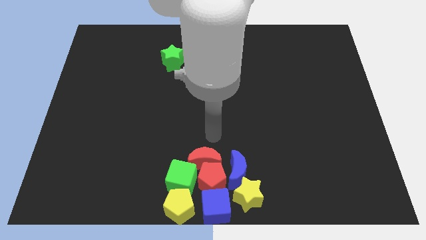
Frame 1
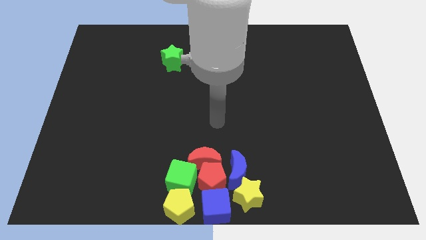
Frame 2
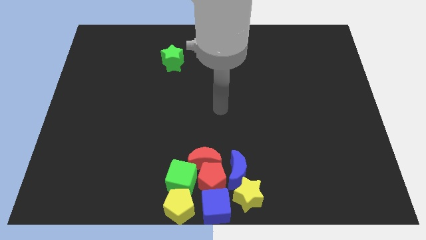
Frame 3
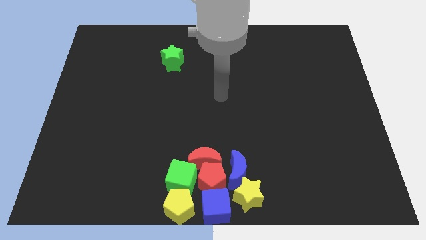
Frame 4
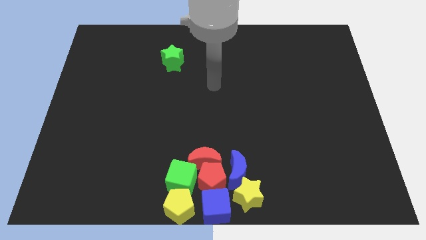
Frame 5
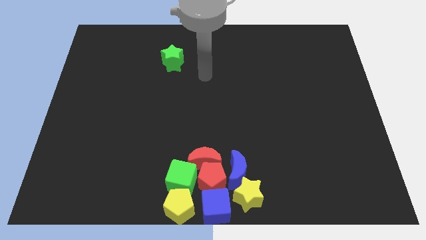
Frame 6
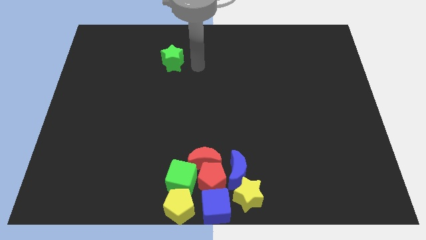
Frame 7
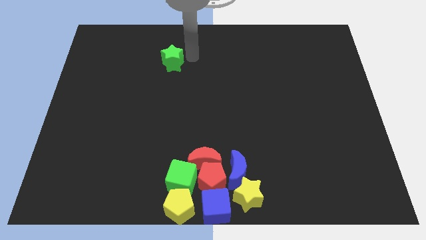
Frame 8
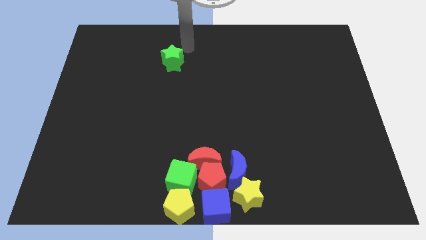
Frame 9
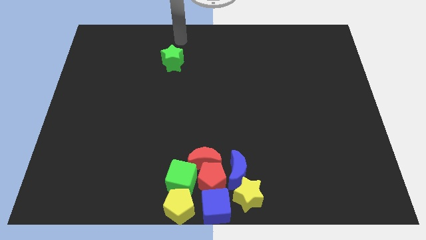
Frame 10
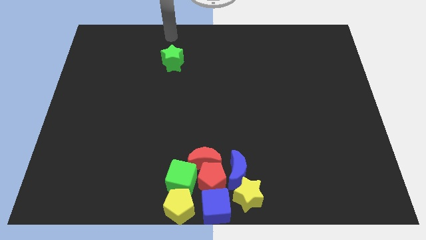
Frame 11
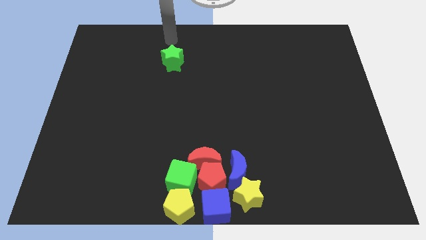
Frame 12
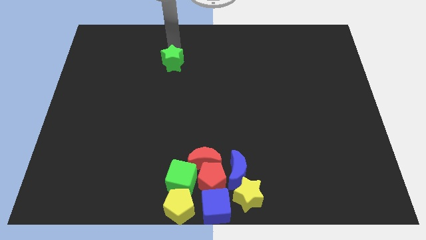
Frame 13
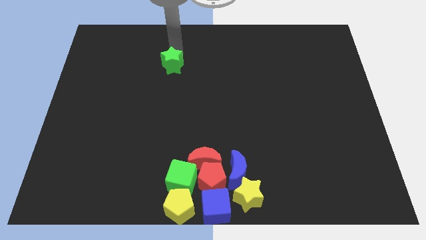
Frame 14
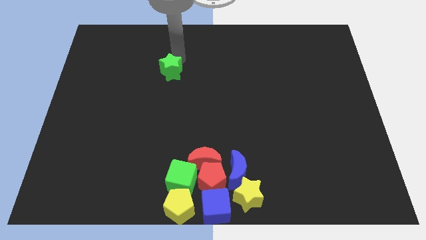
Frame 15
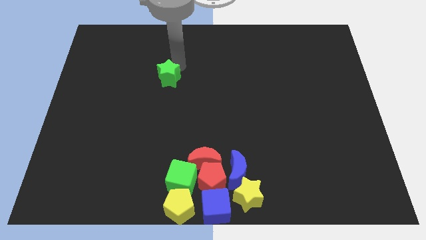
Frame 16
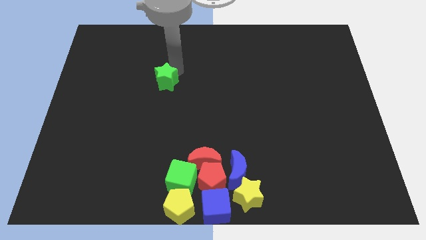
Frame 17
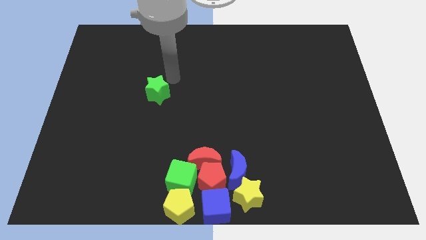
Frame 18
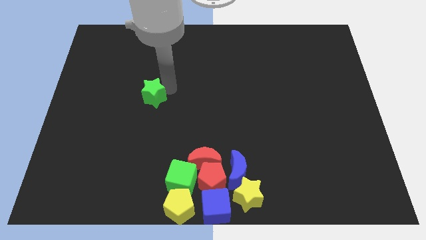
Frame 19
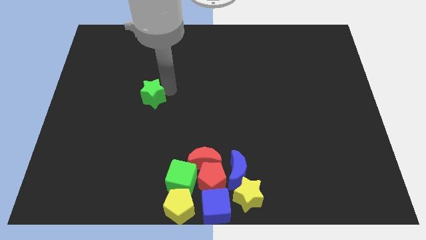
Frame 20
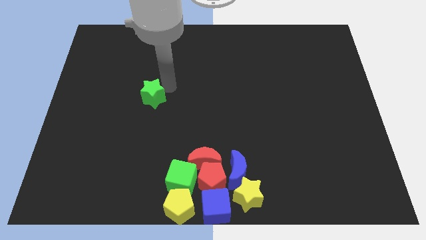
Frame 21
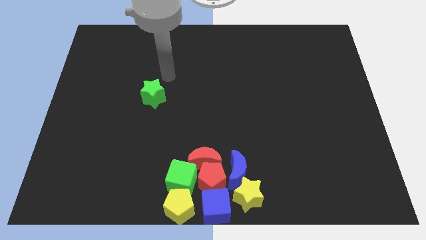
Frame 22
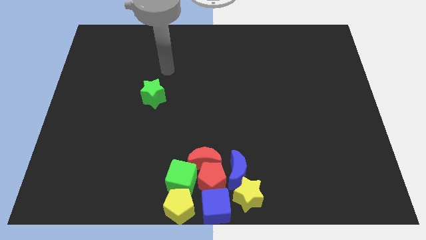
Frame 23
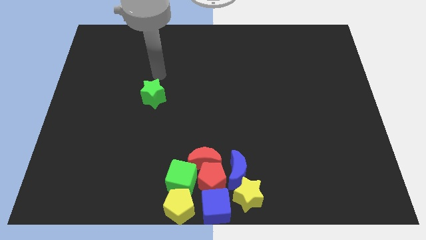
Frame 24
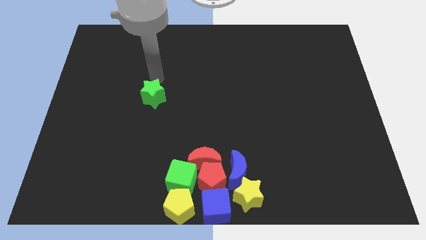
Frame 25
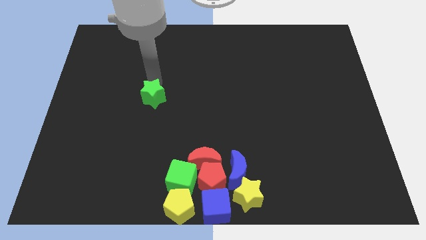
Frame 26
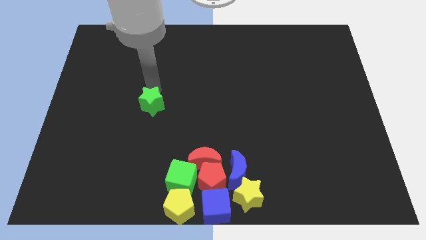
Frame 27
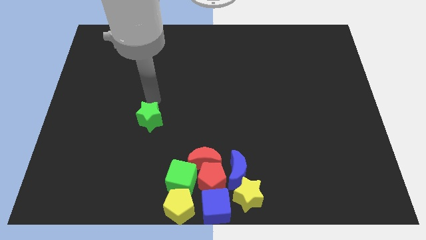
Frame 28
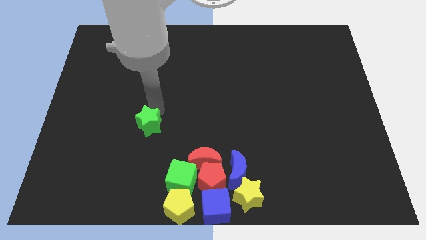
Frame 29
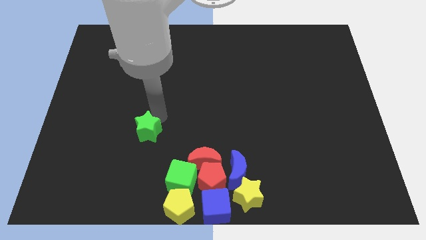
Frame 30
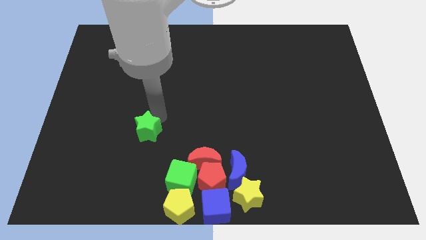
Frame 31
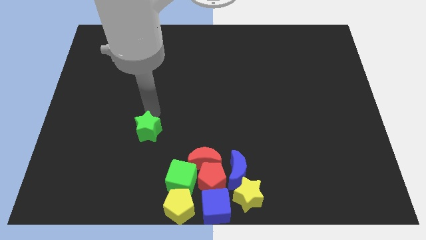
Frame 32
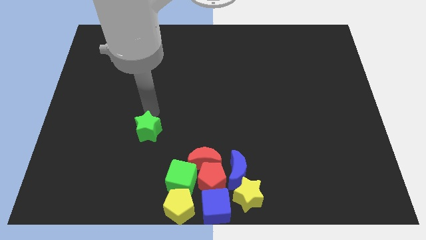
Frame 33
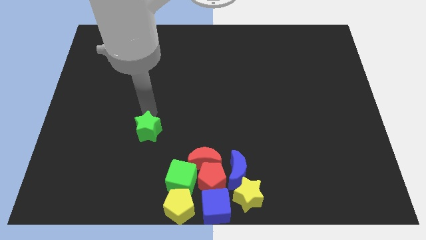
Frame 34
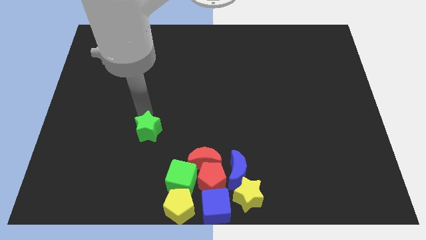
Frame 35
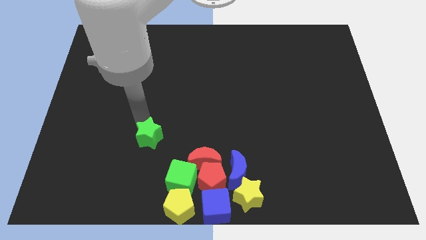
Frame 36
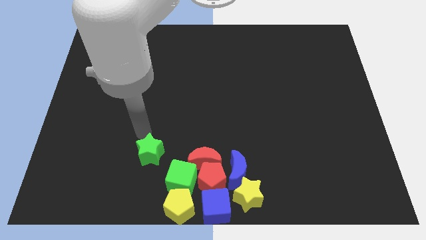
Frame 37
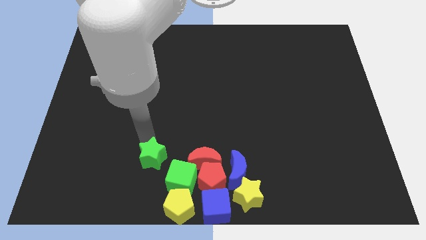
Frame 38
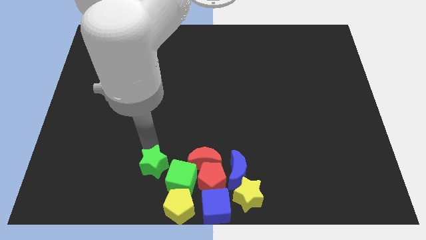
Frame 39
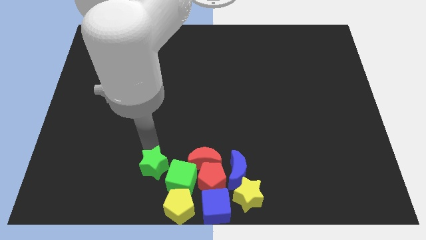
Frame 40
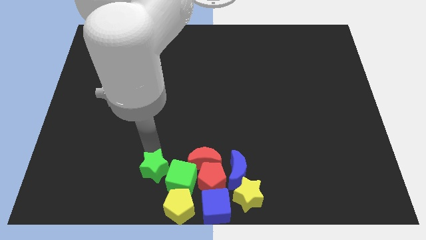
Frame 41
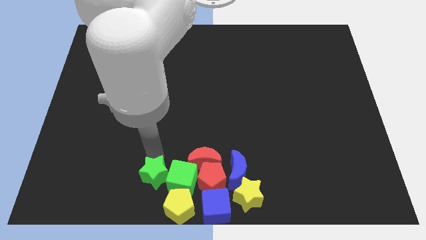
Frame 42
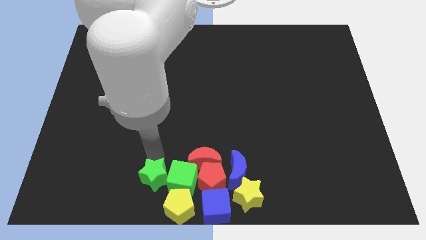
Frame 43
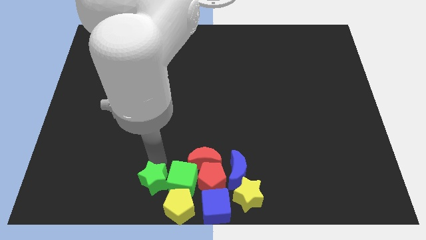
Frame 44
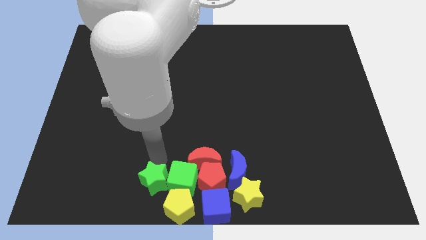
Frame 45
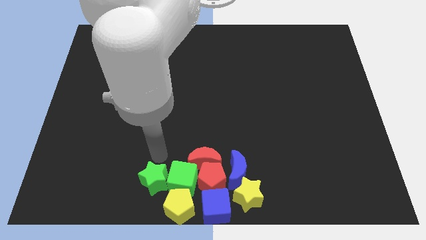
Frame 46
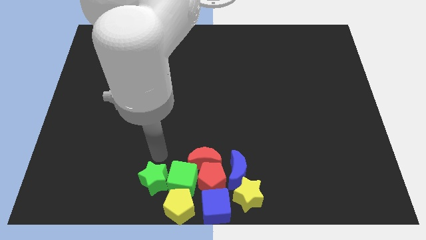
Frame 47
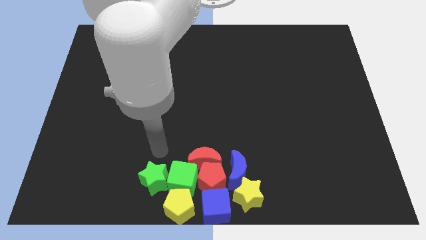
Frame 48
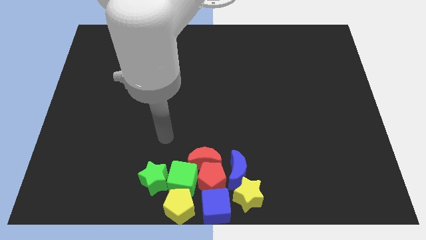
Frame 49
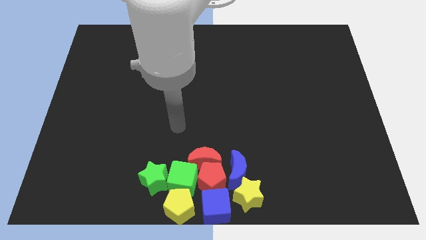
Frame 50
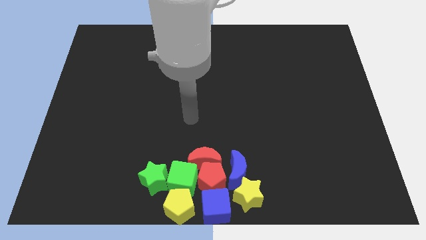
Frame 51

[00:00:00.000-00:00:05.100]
push the green star into green cube

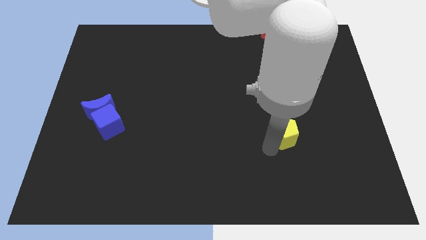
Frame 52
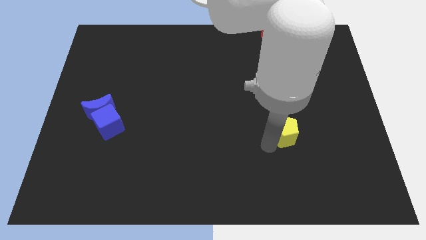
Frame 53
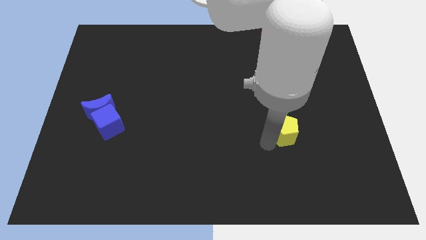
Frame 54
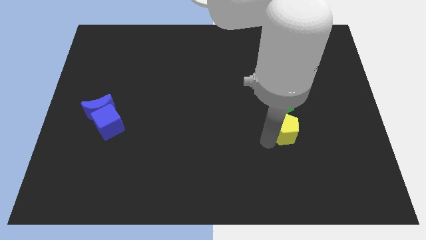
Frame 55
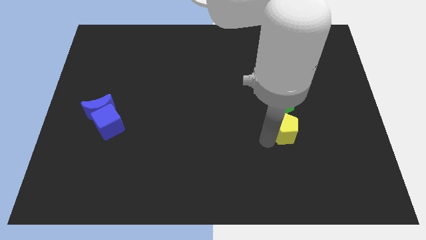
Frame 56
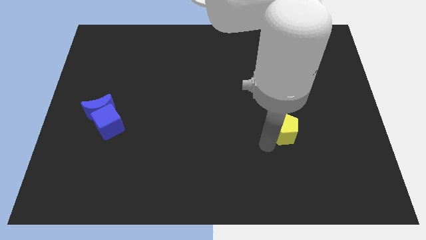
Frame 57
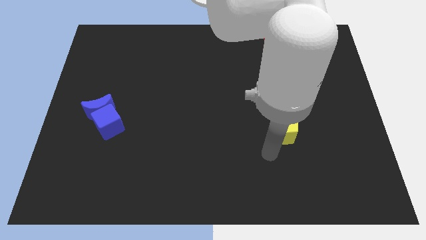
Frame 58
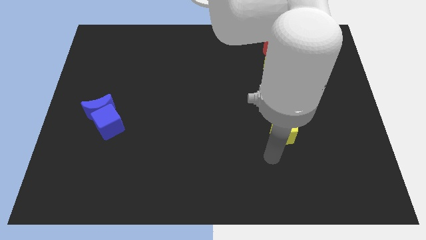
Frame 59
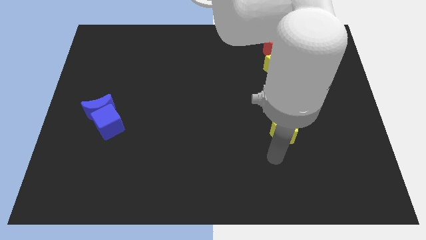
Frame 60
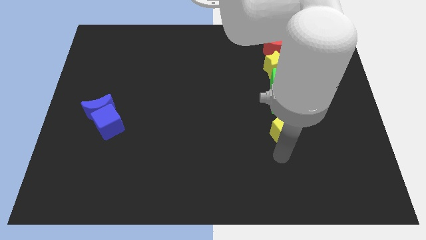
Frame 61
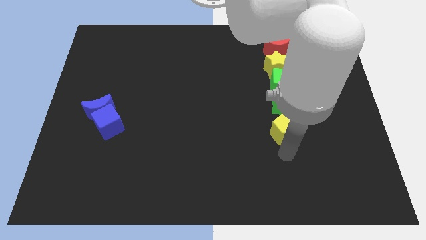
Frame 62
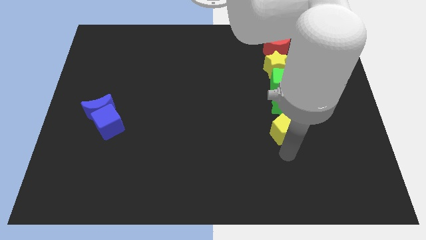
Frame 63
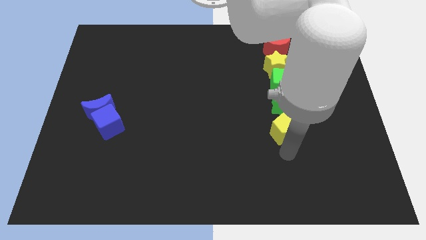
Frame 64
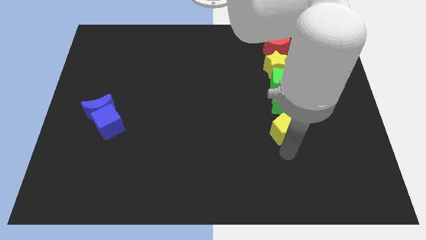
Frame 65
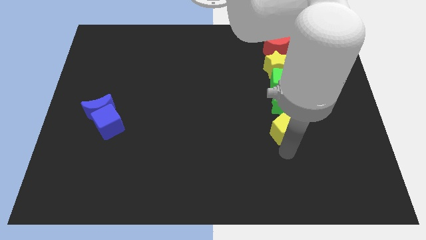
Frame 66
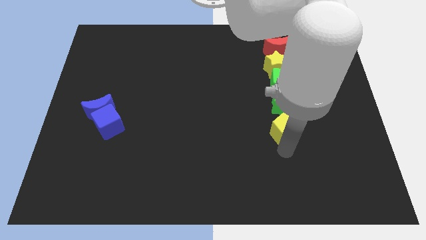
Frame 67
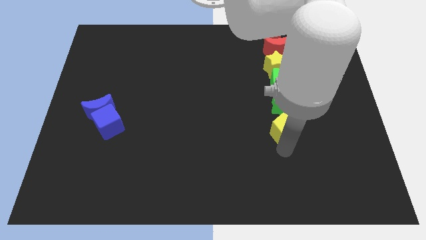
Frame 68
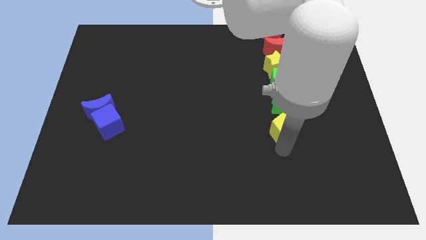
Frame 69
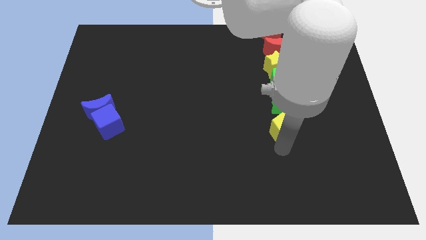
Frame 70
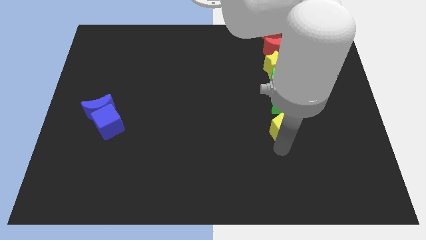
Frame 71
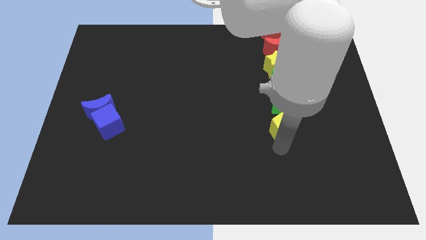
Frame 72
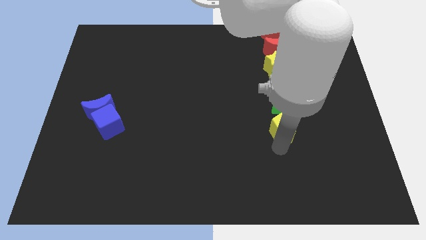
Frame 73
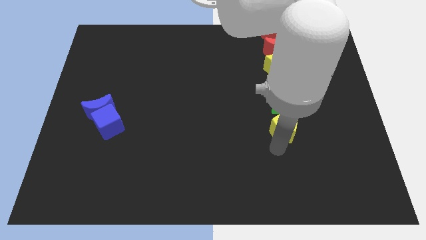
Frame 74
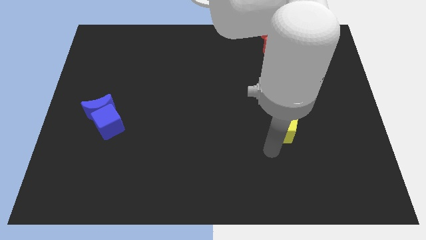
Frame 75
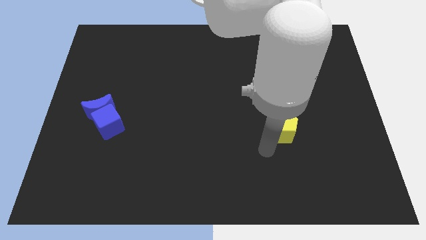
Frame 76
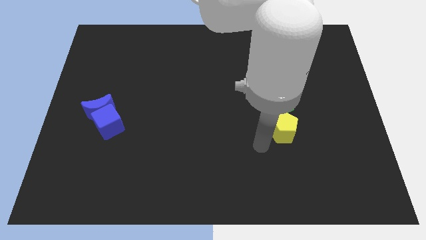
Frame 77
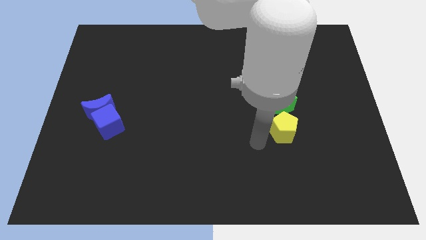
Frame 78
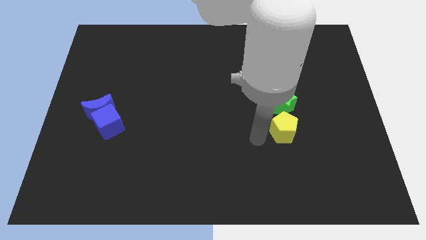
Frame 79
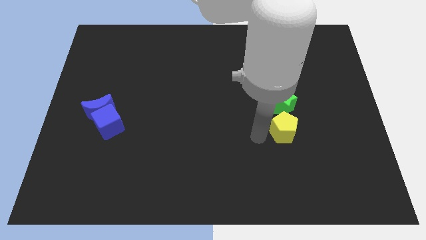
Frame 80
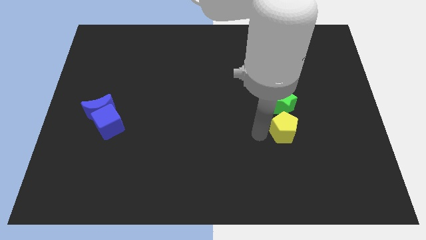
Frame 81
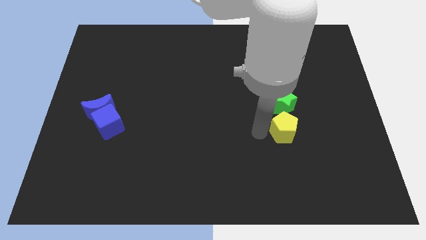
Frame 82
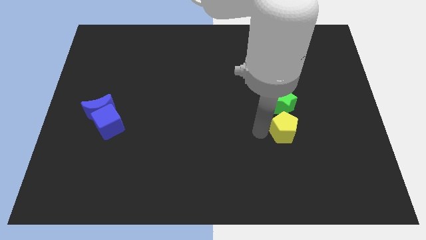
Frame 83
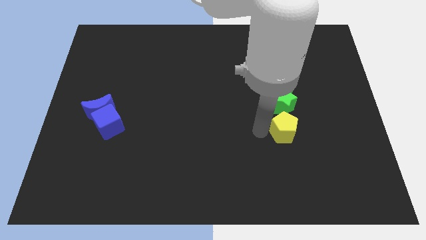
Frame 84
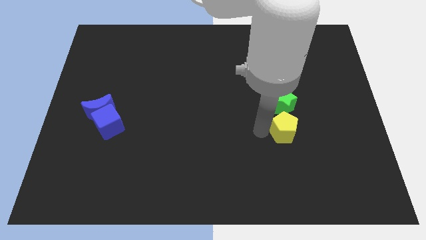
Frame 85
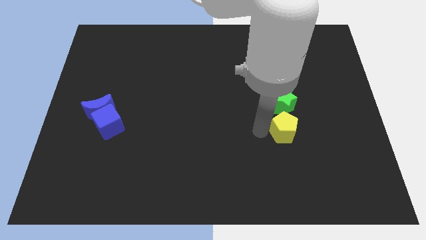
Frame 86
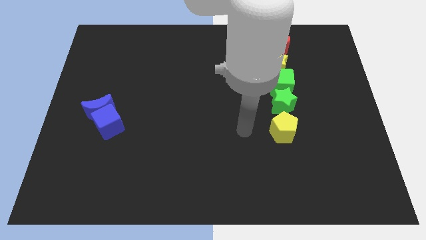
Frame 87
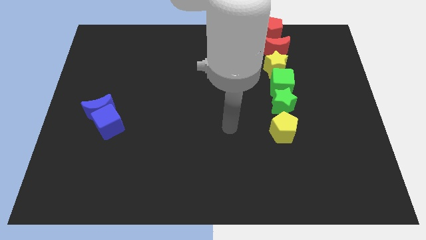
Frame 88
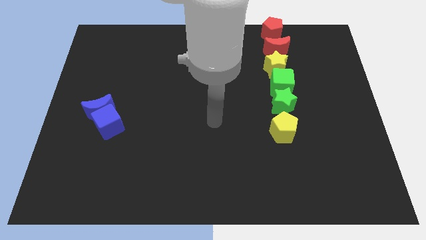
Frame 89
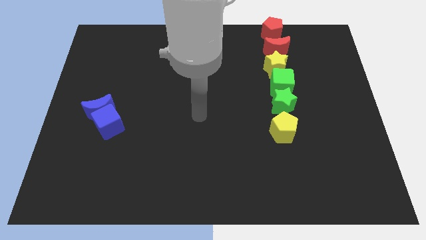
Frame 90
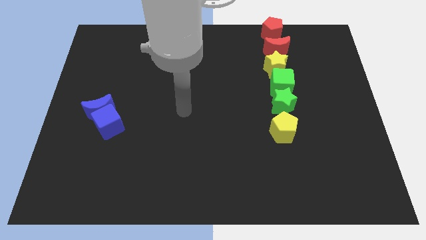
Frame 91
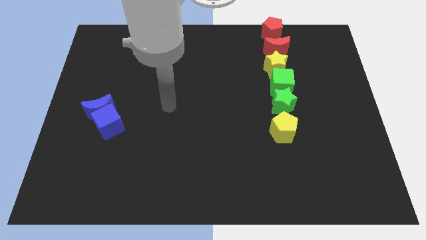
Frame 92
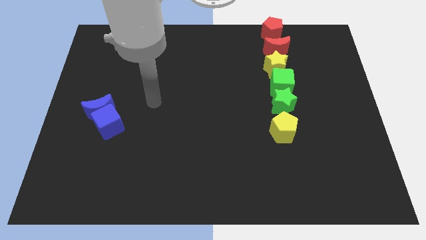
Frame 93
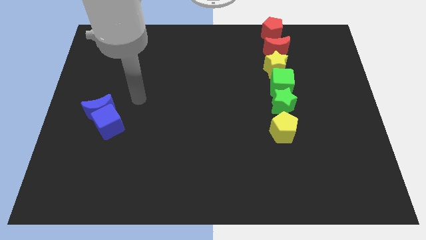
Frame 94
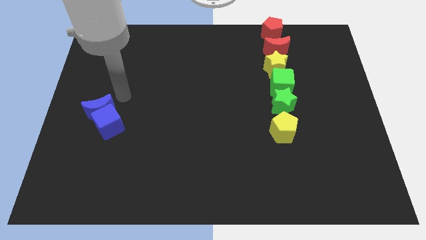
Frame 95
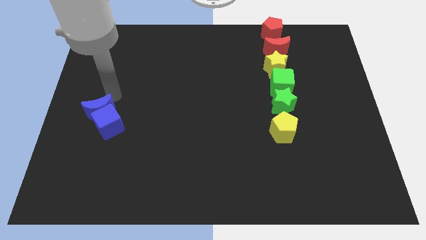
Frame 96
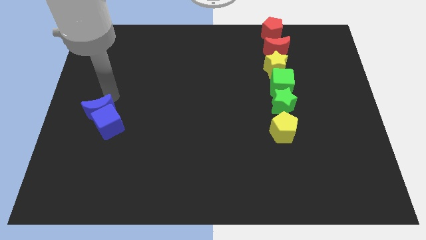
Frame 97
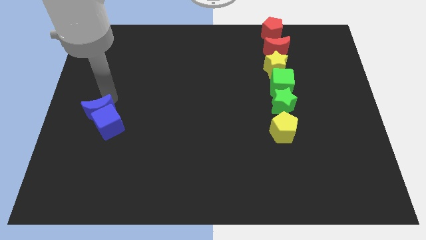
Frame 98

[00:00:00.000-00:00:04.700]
move your away from yellow pentagon
